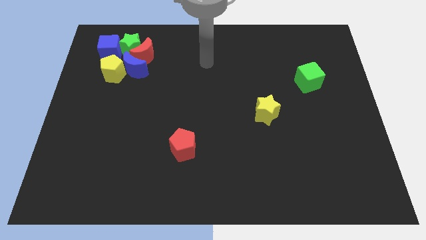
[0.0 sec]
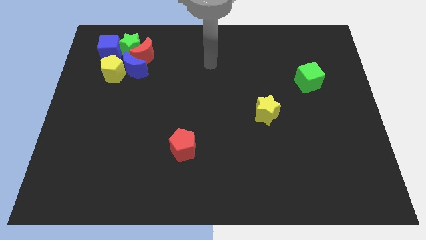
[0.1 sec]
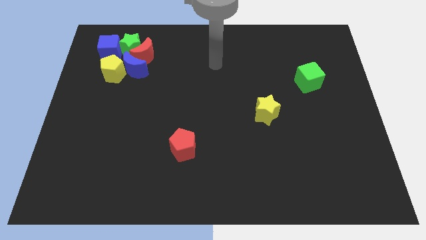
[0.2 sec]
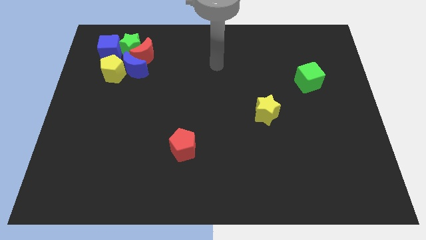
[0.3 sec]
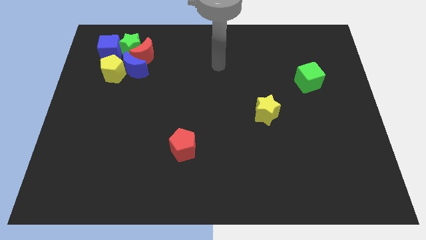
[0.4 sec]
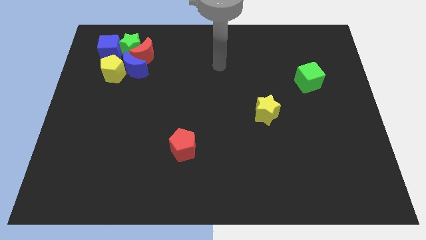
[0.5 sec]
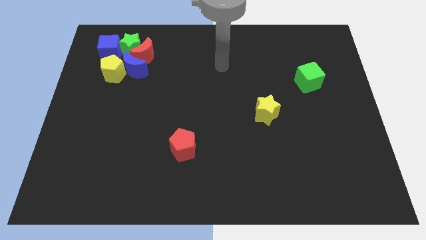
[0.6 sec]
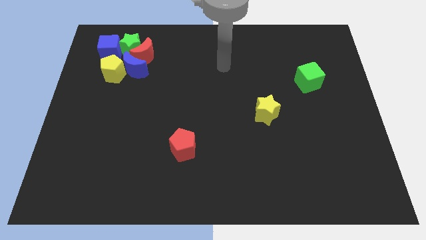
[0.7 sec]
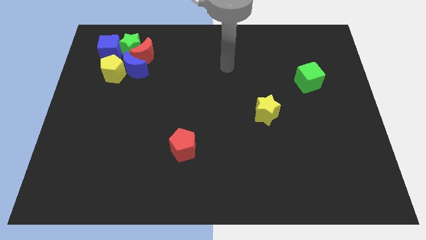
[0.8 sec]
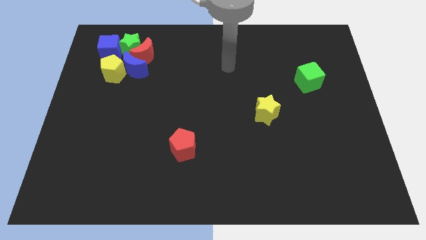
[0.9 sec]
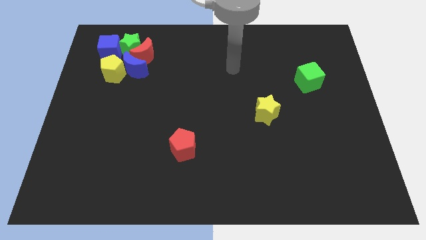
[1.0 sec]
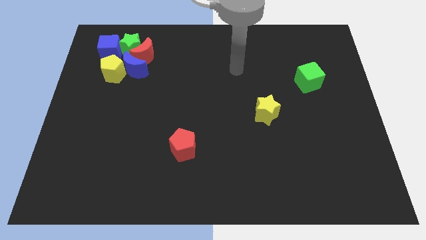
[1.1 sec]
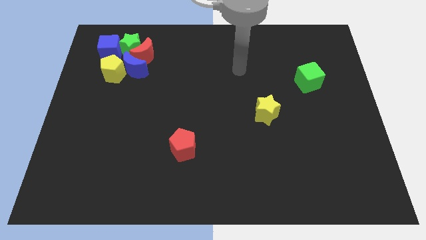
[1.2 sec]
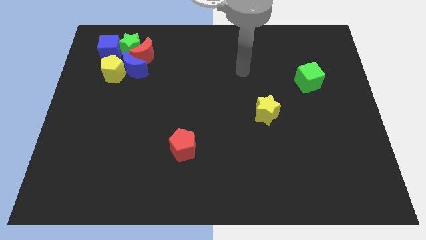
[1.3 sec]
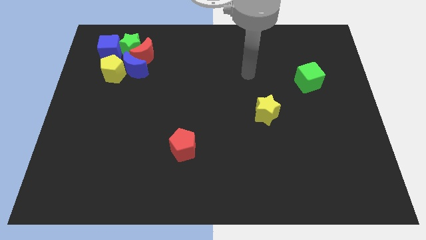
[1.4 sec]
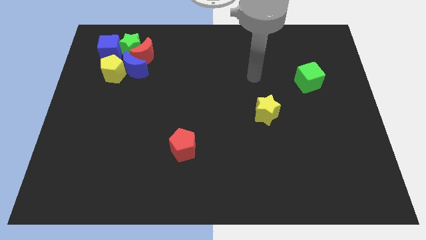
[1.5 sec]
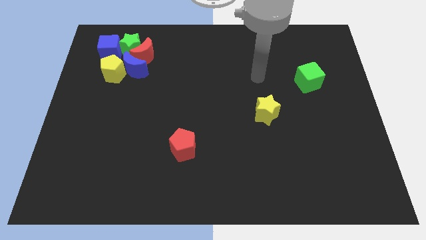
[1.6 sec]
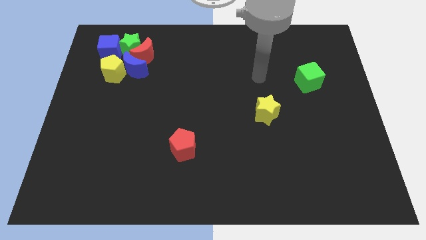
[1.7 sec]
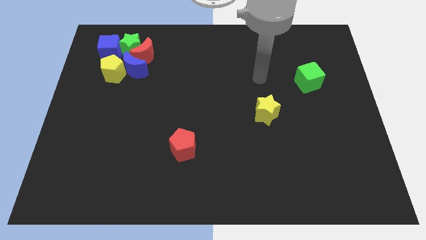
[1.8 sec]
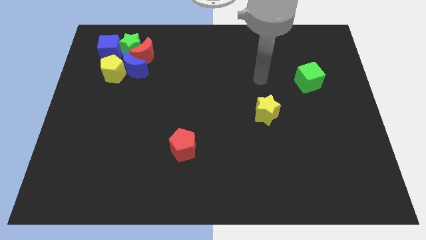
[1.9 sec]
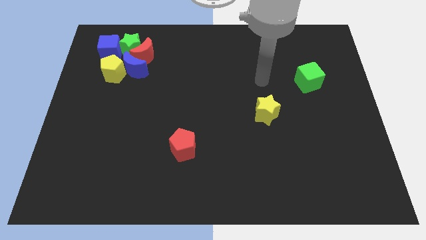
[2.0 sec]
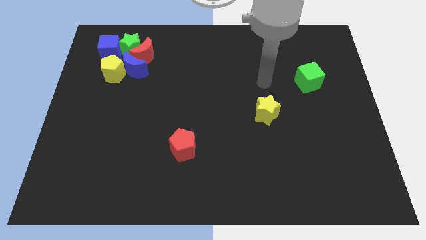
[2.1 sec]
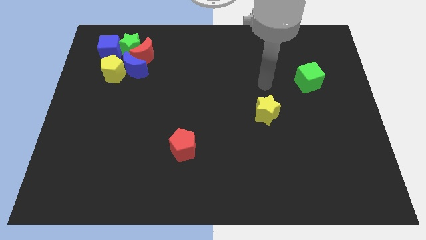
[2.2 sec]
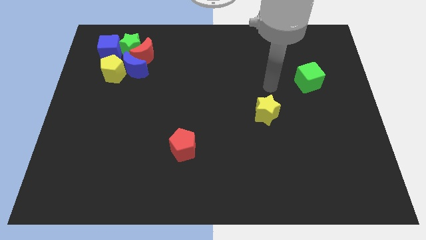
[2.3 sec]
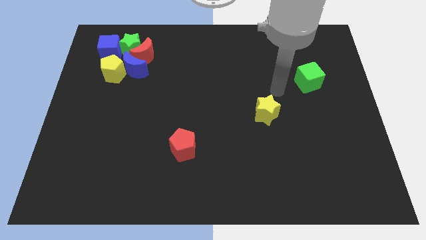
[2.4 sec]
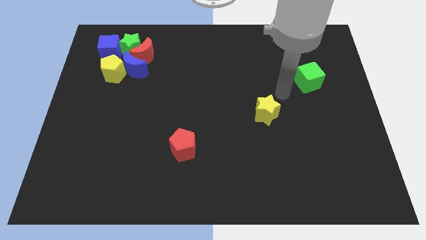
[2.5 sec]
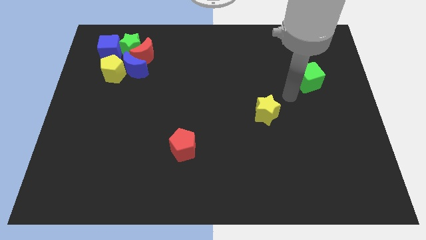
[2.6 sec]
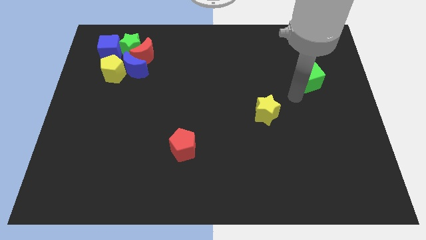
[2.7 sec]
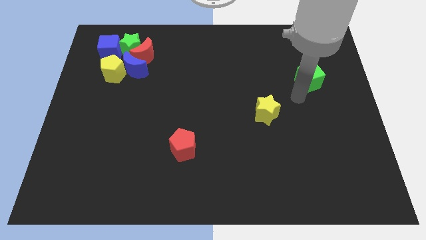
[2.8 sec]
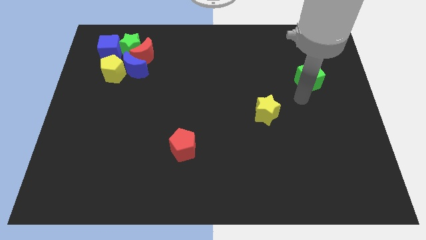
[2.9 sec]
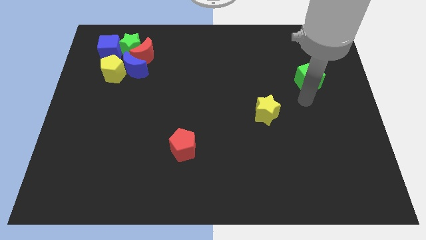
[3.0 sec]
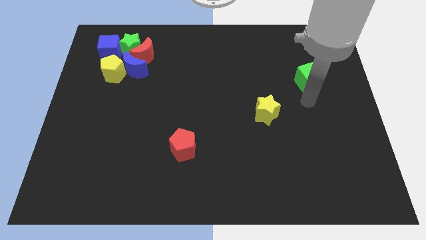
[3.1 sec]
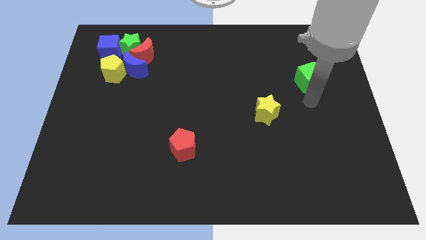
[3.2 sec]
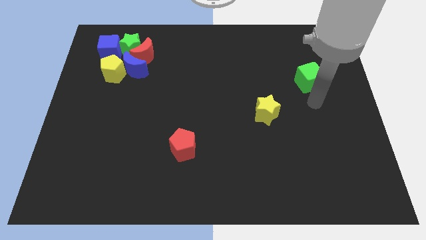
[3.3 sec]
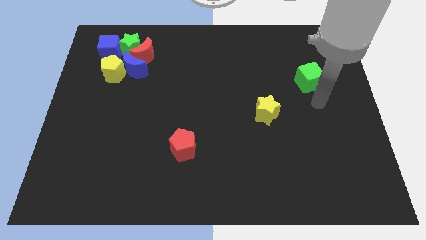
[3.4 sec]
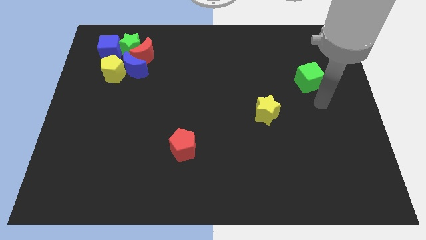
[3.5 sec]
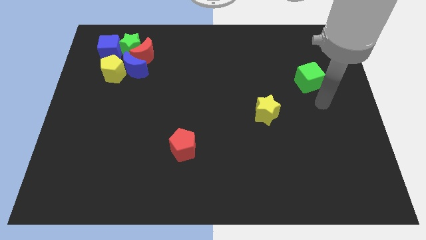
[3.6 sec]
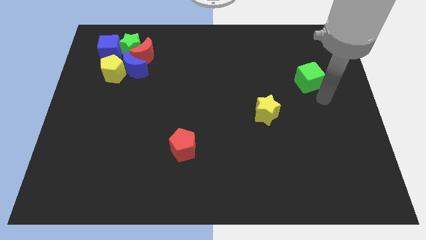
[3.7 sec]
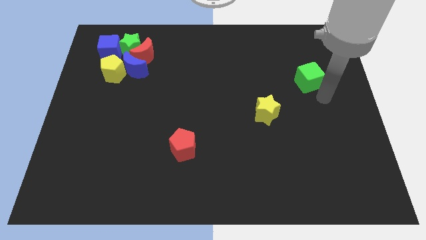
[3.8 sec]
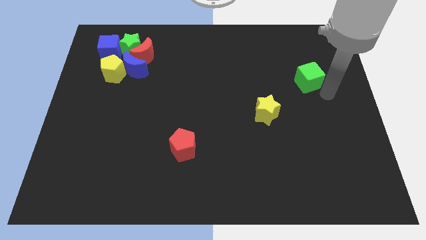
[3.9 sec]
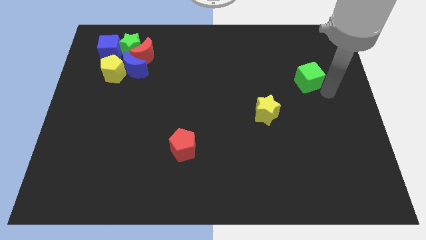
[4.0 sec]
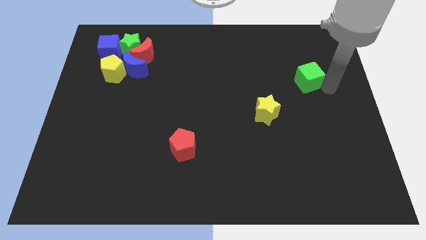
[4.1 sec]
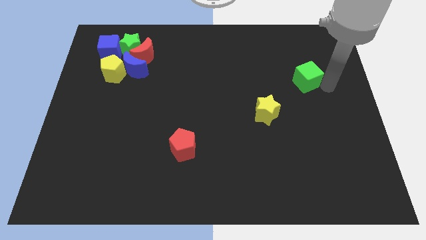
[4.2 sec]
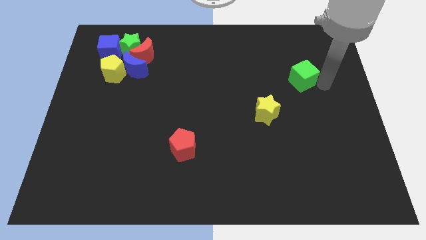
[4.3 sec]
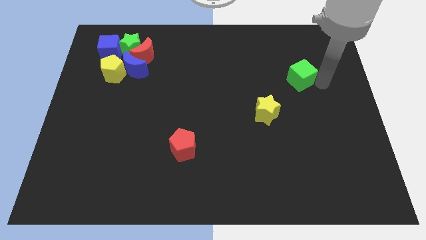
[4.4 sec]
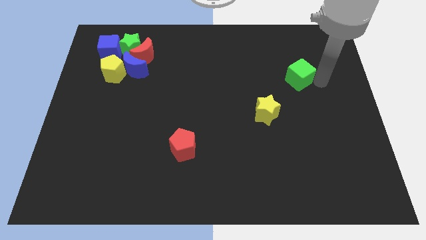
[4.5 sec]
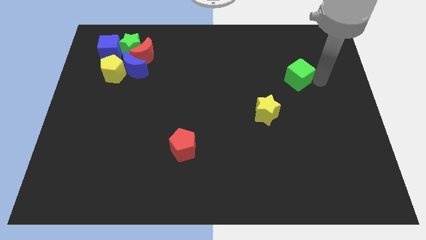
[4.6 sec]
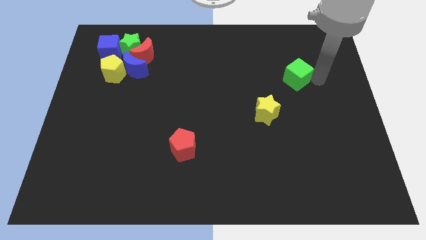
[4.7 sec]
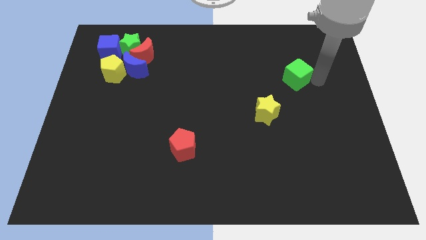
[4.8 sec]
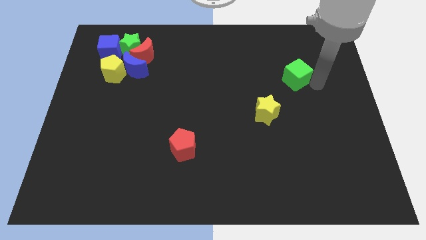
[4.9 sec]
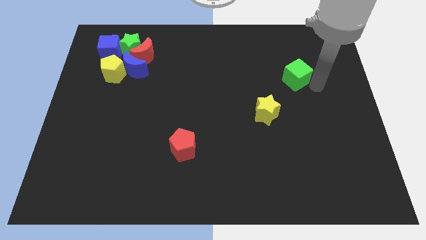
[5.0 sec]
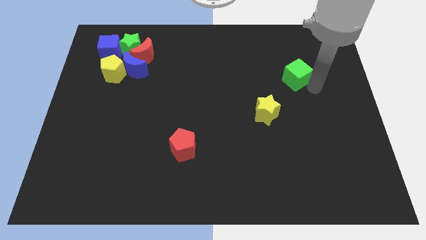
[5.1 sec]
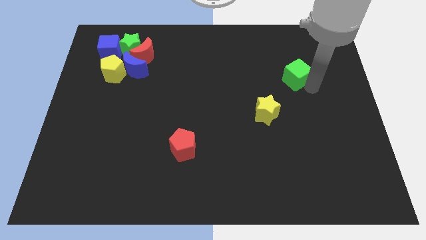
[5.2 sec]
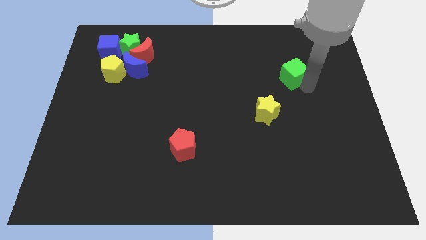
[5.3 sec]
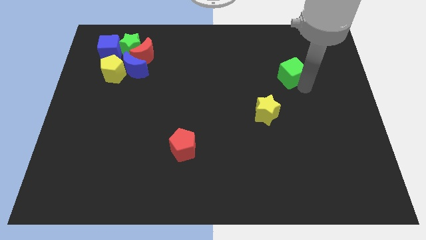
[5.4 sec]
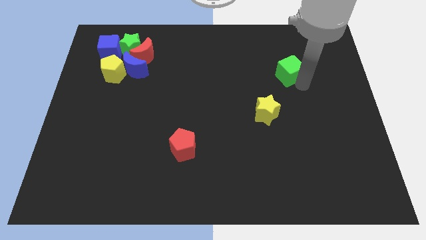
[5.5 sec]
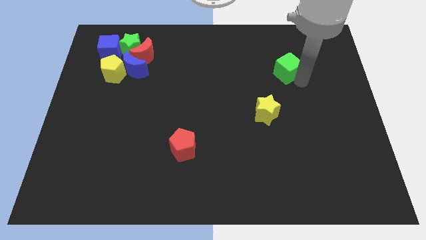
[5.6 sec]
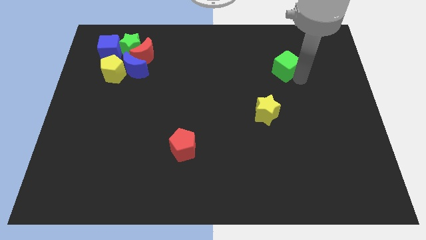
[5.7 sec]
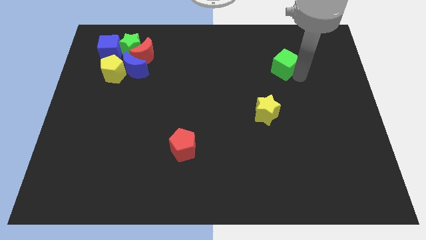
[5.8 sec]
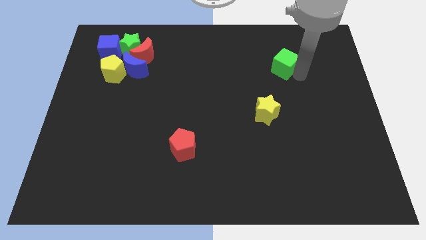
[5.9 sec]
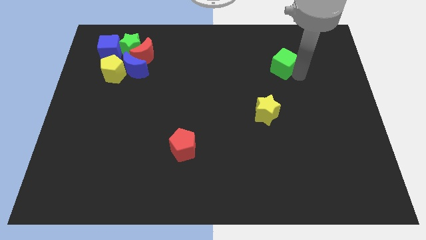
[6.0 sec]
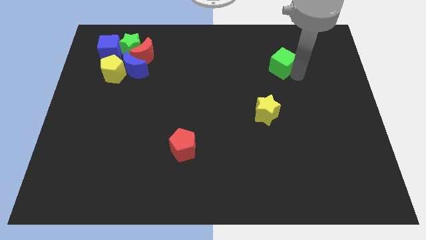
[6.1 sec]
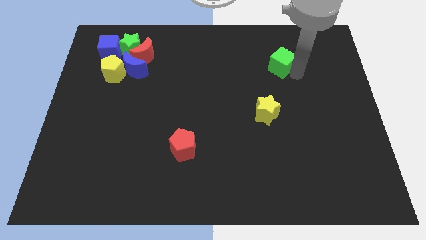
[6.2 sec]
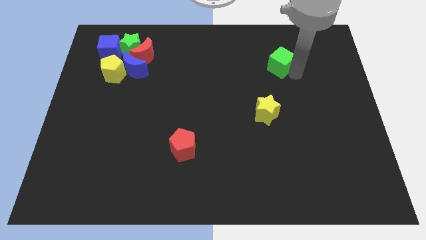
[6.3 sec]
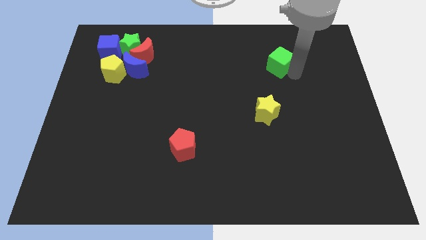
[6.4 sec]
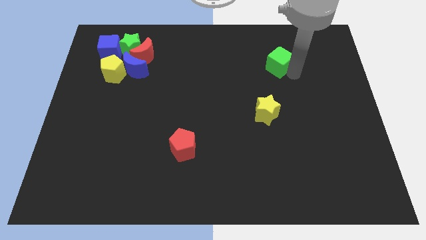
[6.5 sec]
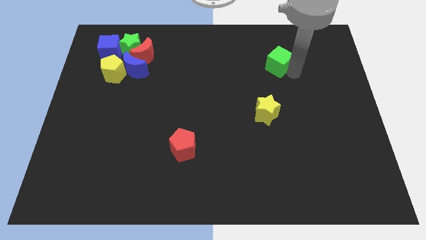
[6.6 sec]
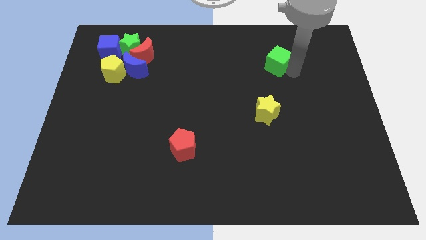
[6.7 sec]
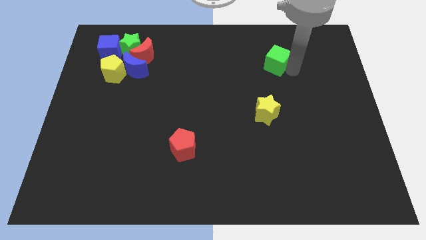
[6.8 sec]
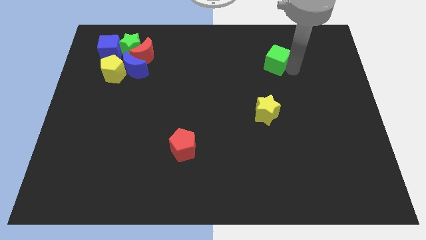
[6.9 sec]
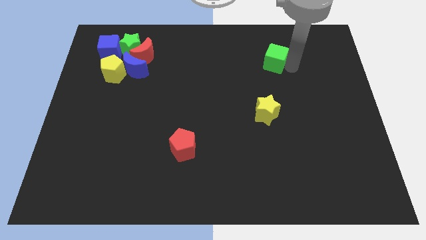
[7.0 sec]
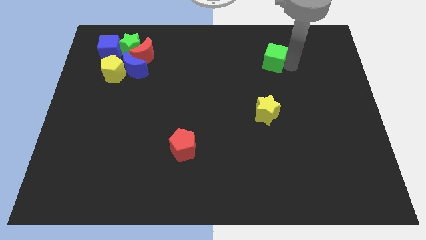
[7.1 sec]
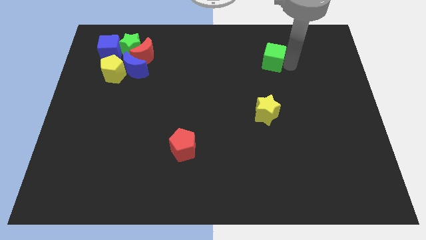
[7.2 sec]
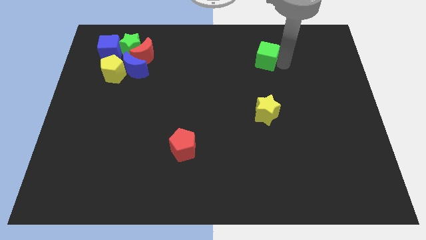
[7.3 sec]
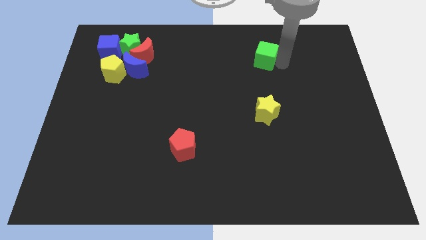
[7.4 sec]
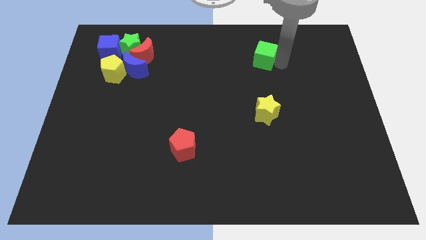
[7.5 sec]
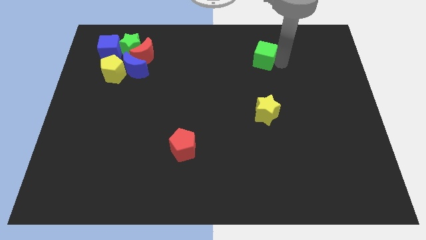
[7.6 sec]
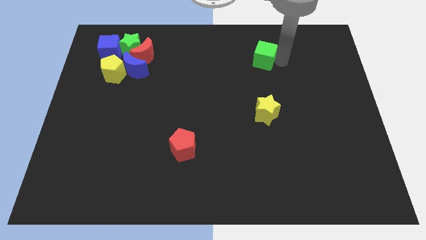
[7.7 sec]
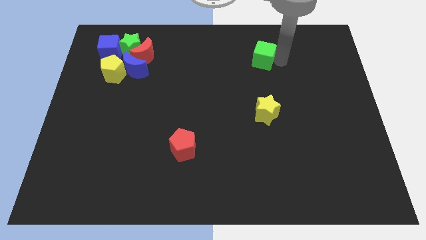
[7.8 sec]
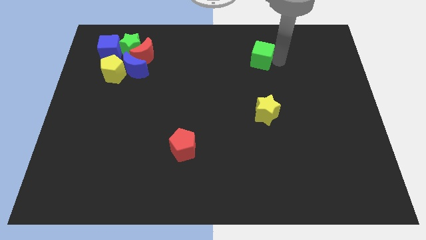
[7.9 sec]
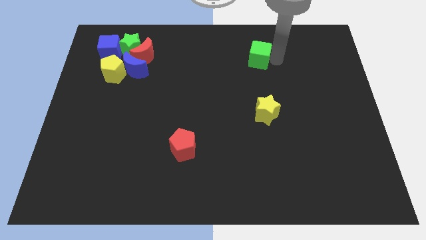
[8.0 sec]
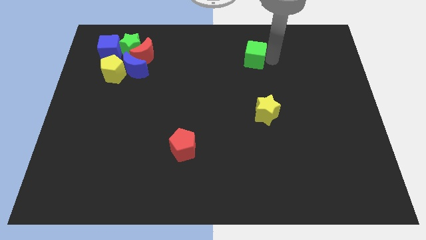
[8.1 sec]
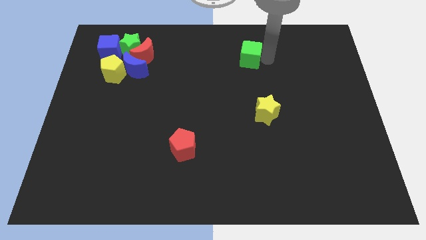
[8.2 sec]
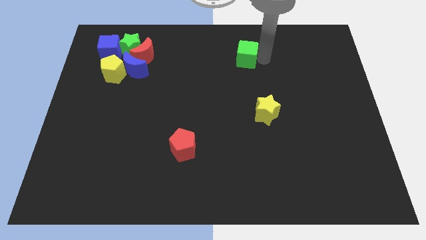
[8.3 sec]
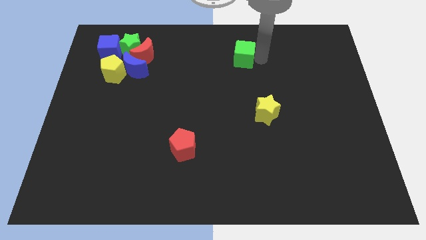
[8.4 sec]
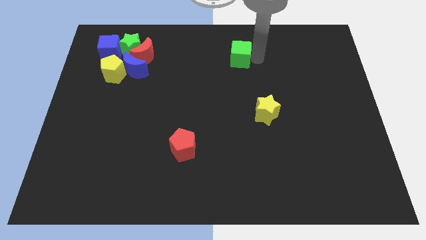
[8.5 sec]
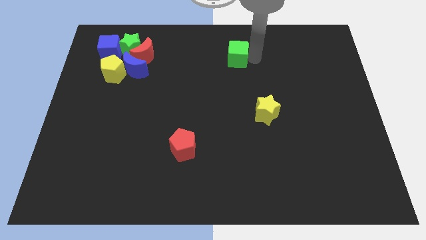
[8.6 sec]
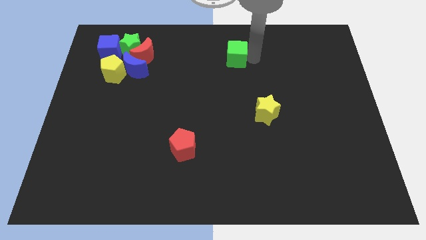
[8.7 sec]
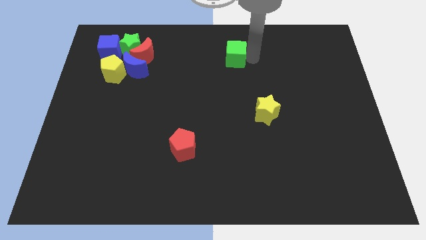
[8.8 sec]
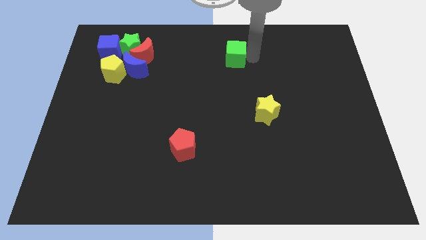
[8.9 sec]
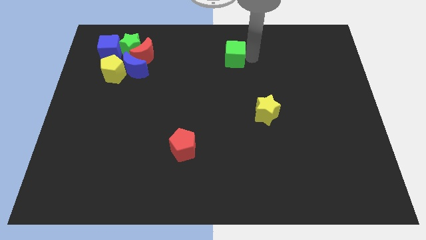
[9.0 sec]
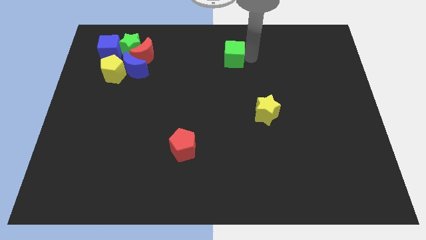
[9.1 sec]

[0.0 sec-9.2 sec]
push the green cube towards left side of the board
